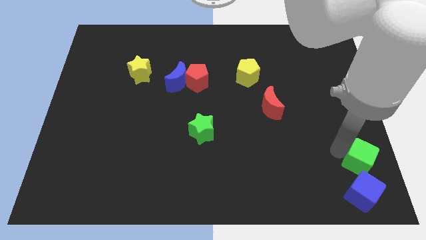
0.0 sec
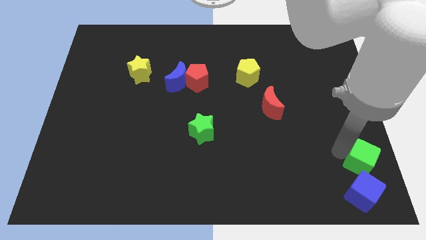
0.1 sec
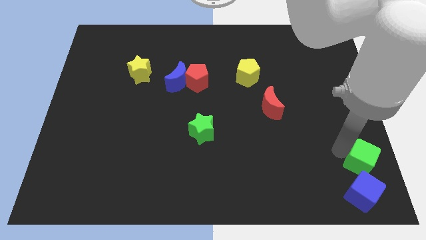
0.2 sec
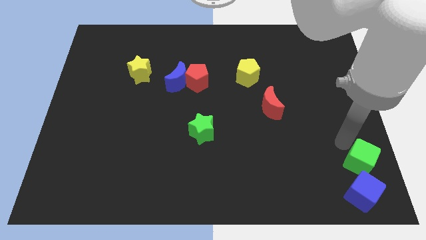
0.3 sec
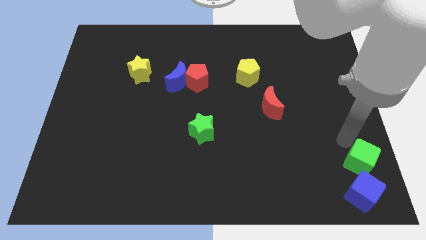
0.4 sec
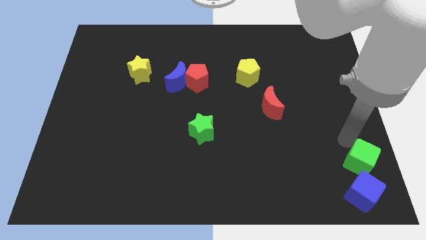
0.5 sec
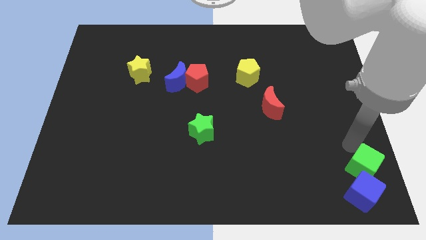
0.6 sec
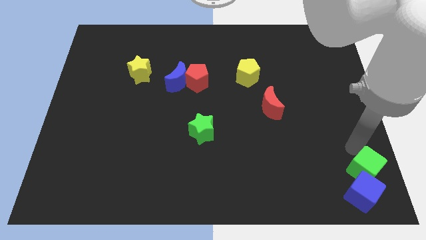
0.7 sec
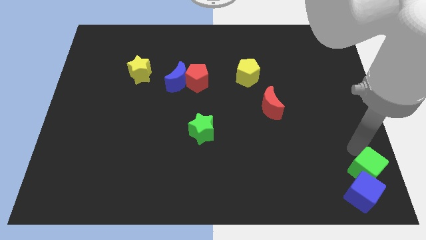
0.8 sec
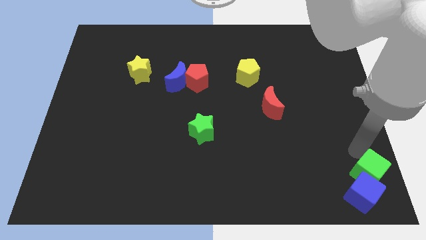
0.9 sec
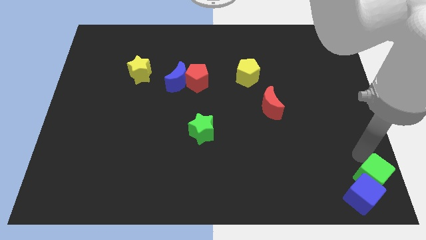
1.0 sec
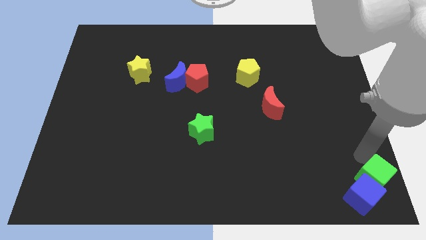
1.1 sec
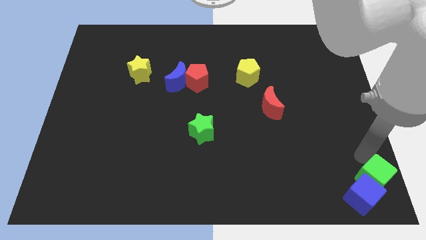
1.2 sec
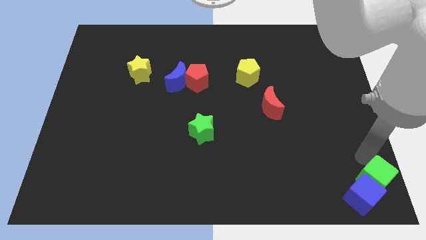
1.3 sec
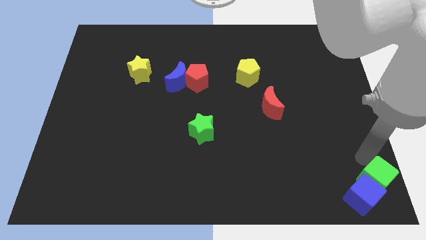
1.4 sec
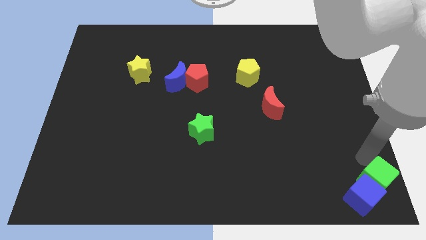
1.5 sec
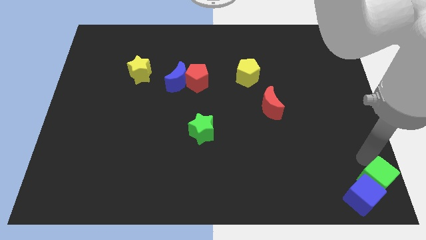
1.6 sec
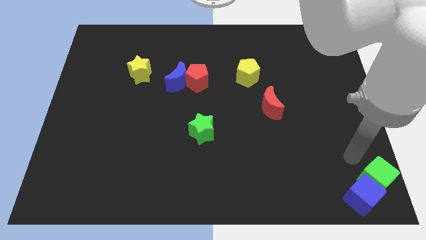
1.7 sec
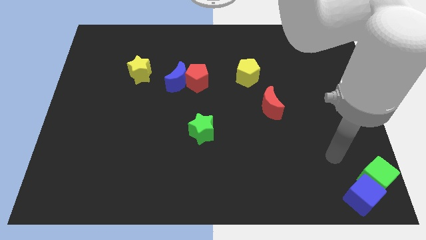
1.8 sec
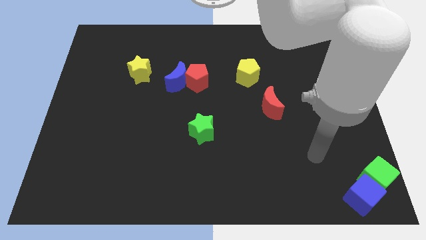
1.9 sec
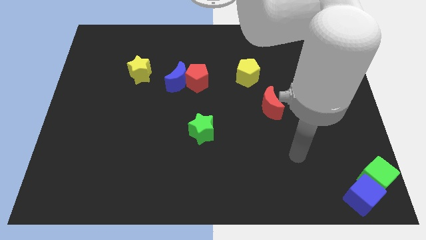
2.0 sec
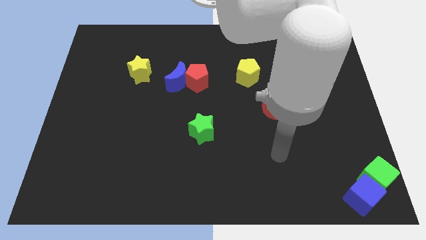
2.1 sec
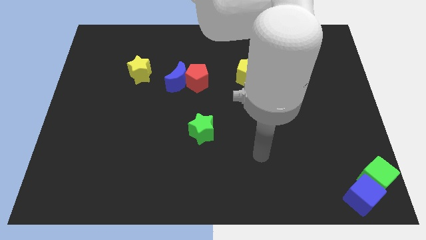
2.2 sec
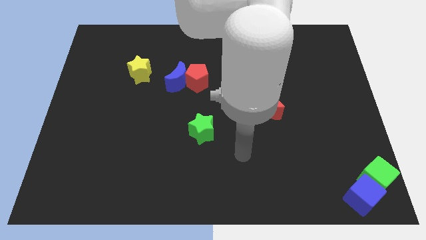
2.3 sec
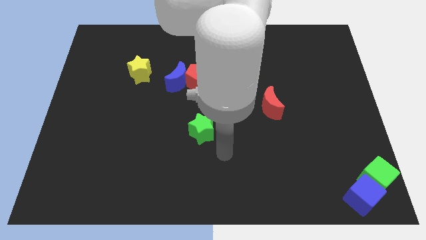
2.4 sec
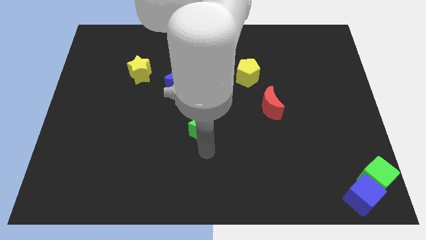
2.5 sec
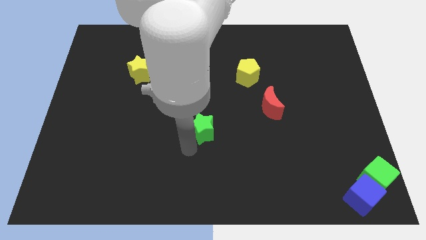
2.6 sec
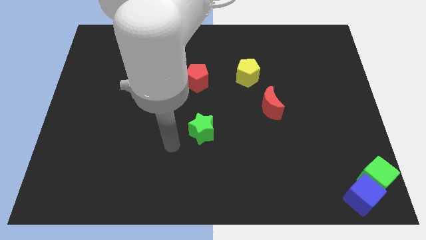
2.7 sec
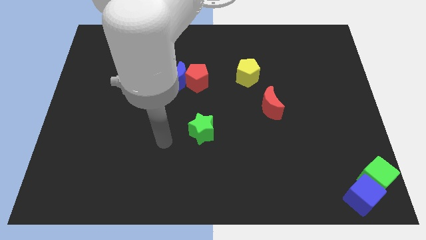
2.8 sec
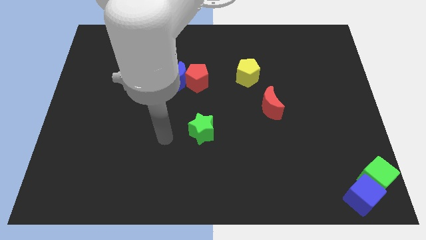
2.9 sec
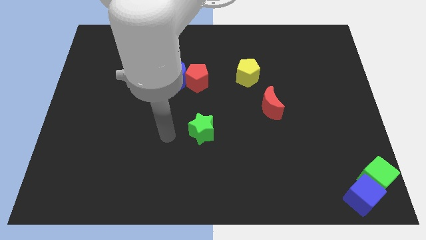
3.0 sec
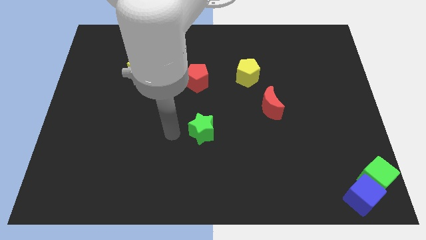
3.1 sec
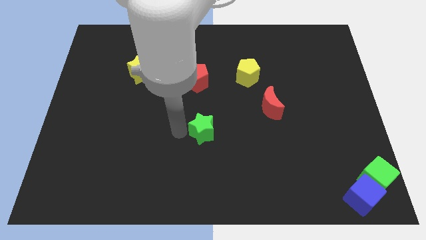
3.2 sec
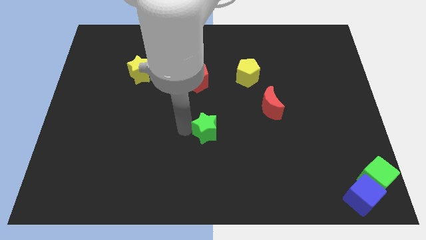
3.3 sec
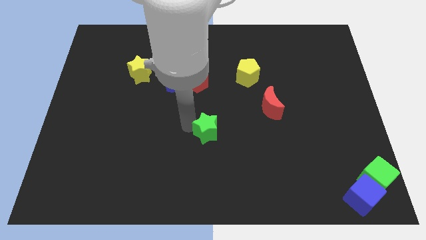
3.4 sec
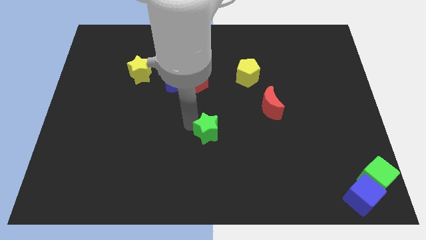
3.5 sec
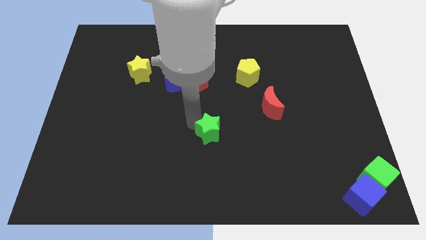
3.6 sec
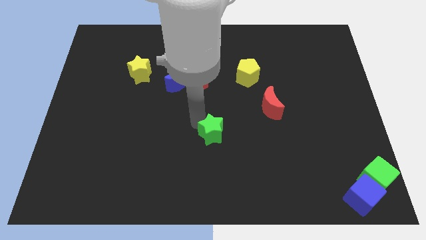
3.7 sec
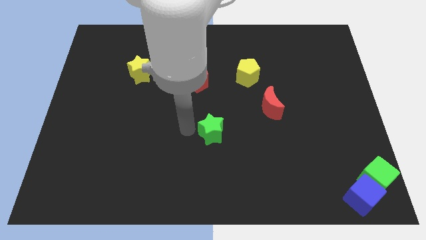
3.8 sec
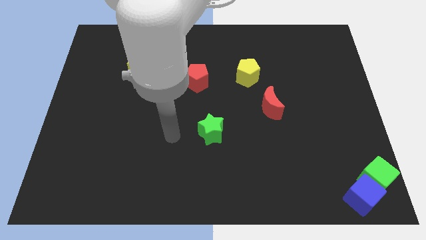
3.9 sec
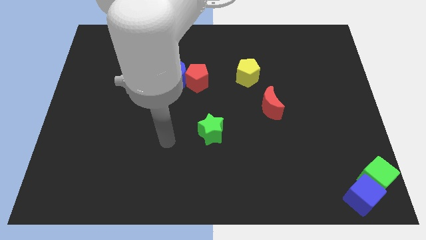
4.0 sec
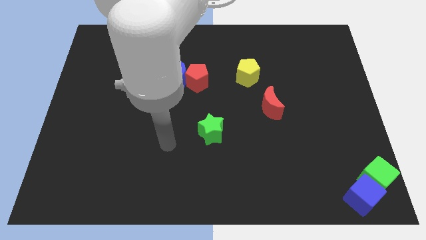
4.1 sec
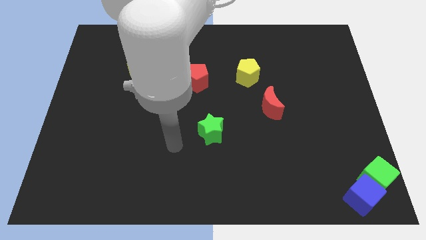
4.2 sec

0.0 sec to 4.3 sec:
slightly push the green star to the right

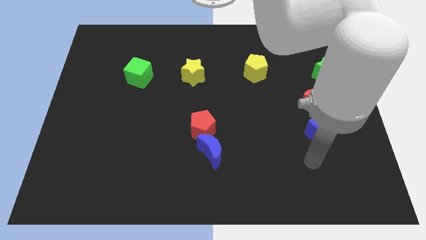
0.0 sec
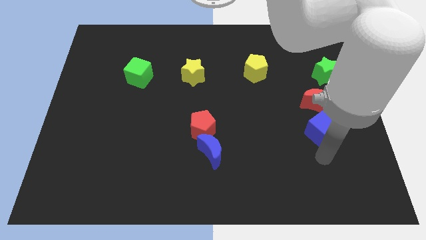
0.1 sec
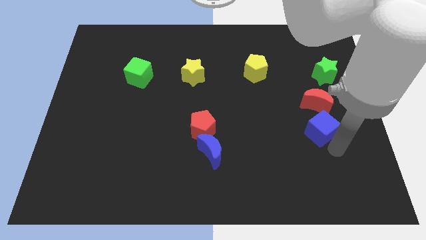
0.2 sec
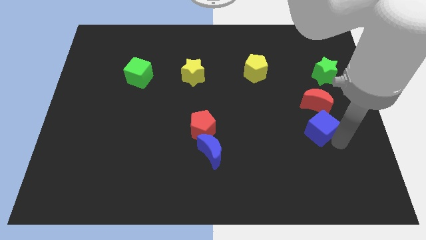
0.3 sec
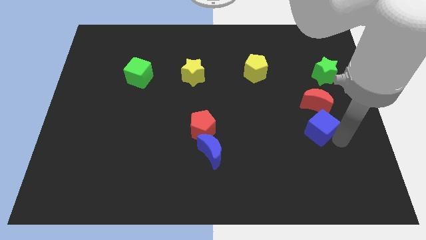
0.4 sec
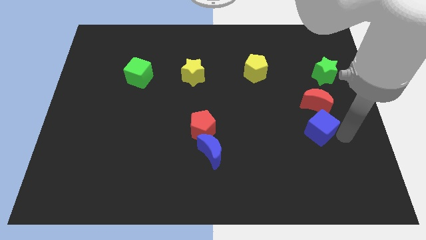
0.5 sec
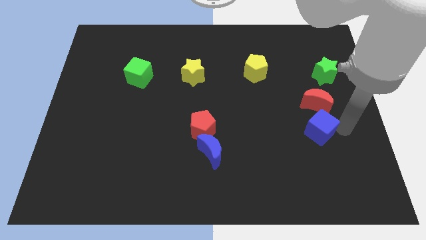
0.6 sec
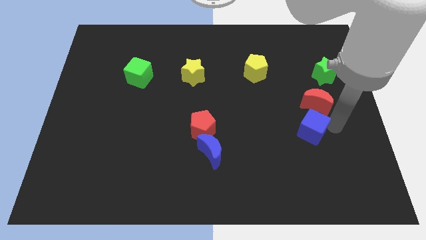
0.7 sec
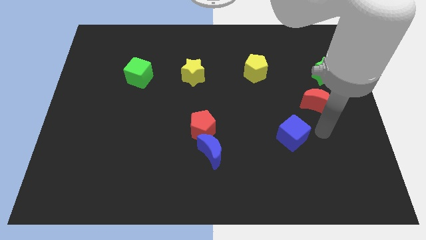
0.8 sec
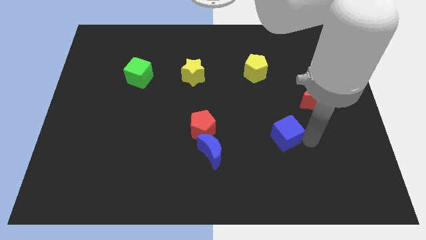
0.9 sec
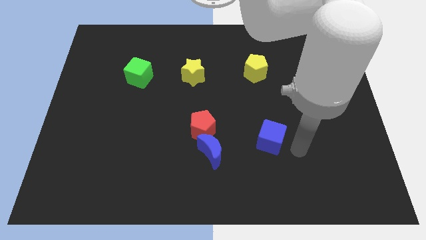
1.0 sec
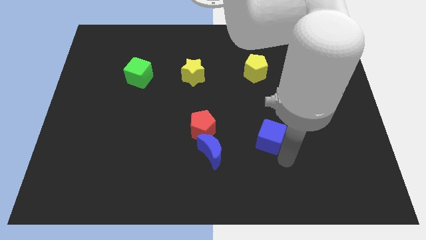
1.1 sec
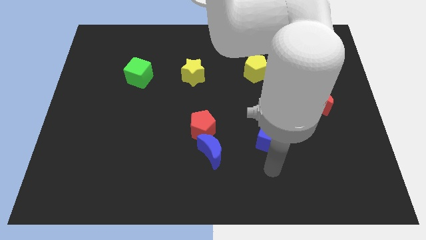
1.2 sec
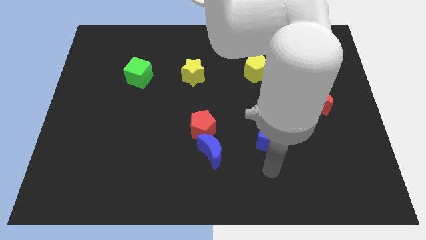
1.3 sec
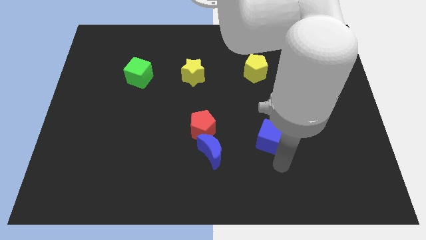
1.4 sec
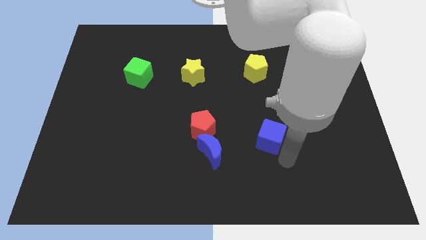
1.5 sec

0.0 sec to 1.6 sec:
push the blue cube between blue moon and red moon

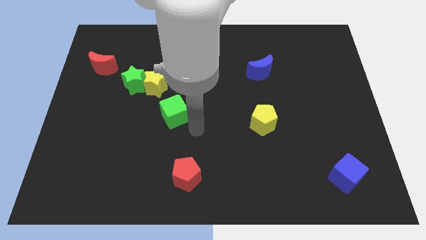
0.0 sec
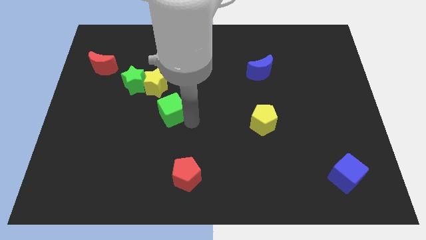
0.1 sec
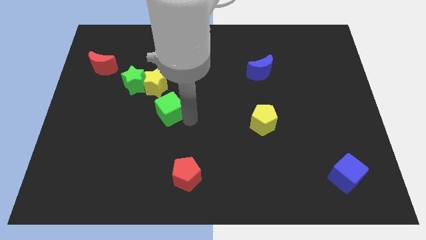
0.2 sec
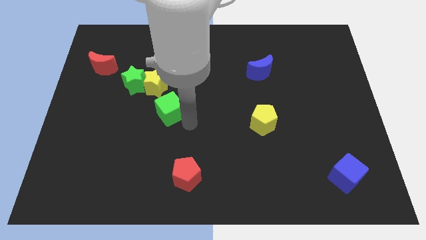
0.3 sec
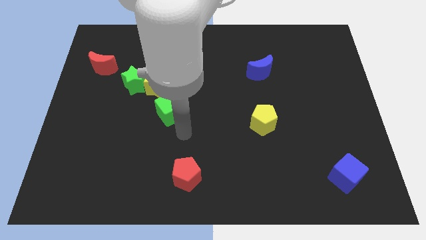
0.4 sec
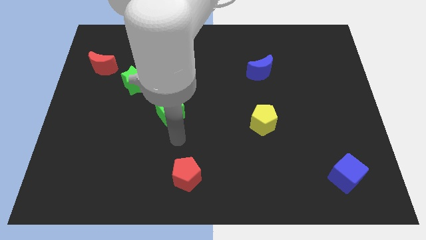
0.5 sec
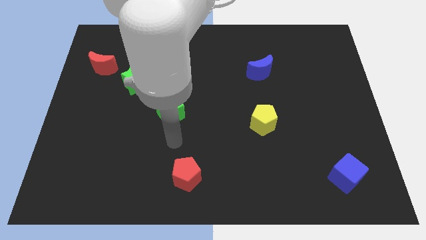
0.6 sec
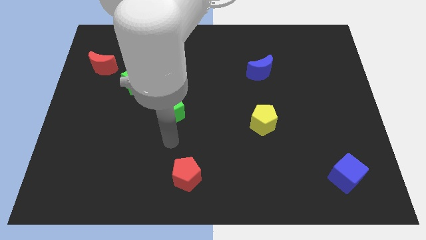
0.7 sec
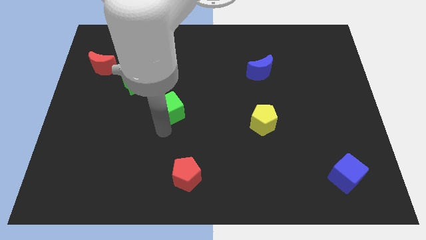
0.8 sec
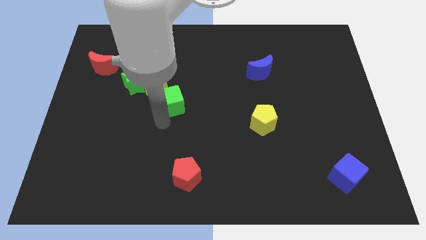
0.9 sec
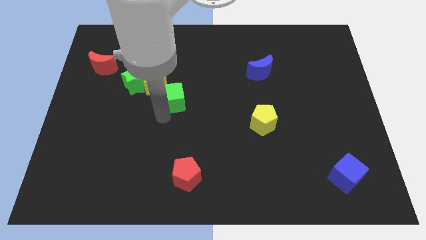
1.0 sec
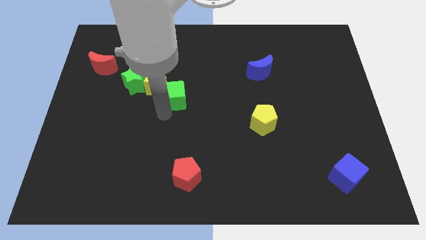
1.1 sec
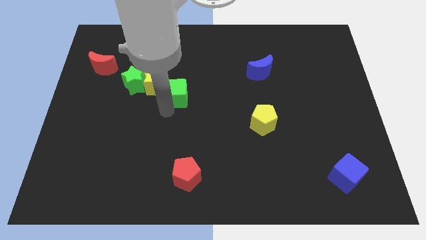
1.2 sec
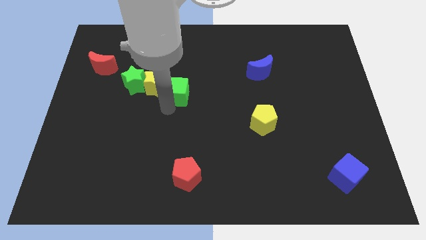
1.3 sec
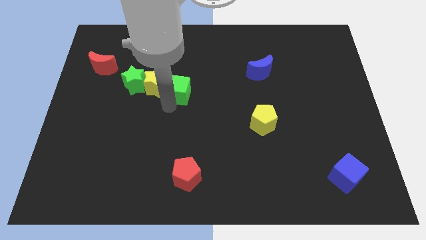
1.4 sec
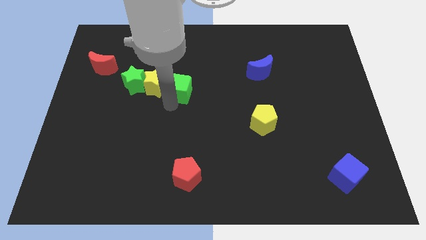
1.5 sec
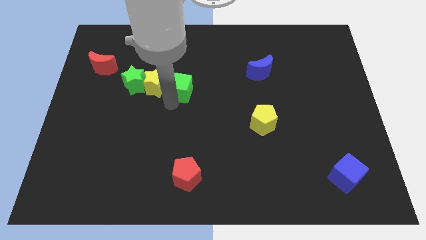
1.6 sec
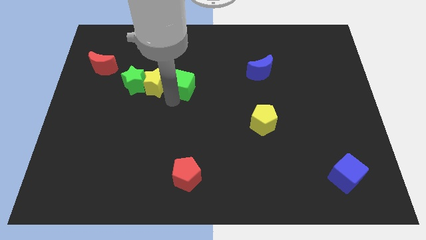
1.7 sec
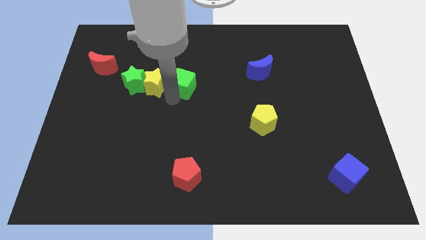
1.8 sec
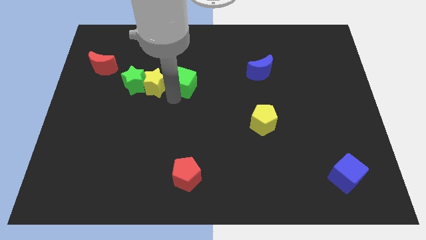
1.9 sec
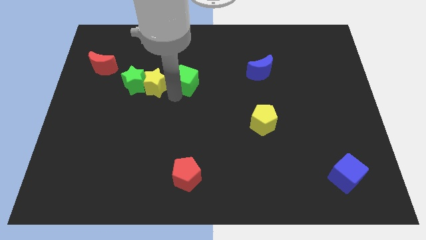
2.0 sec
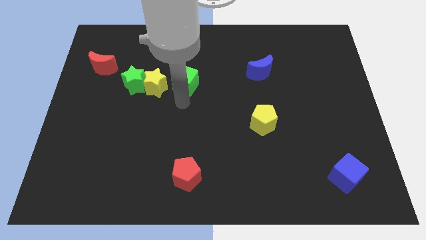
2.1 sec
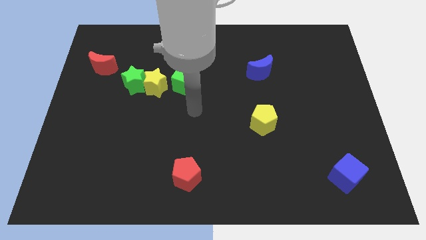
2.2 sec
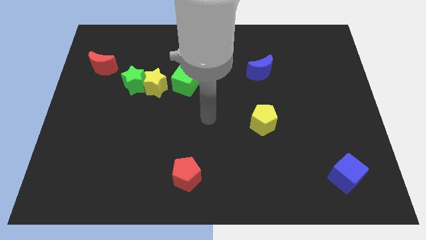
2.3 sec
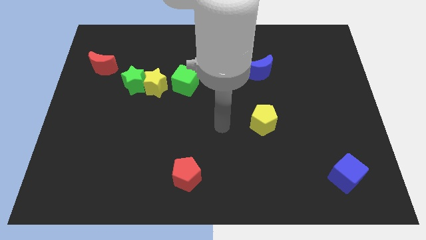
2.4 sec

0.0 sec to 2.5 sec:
place green cube on right side of yellow star

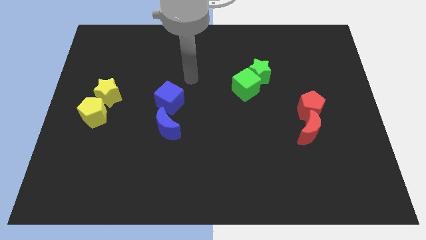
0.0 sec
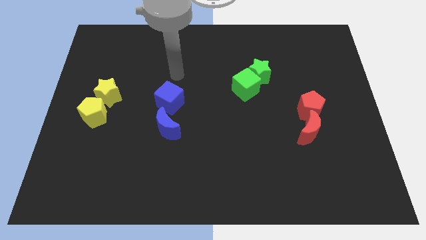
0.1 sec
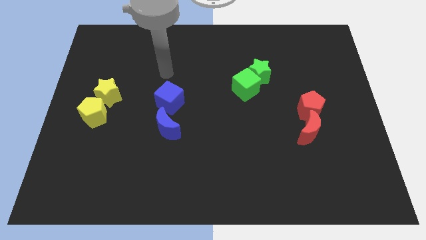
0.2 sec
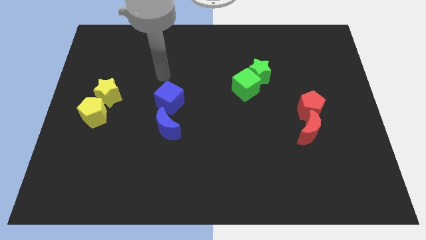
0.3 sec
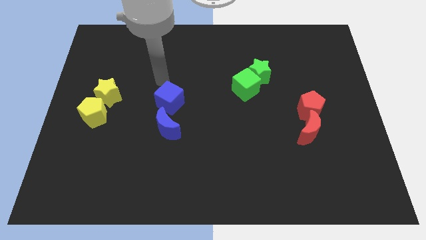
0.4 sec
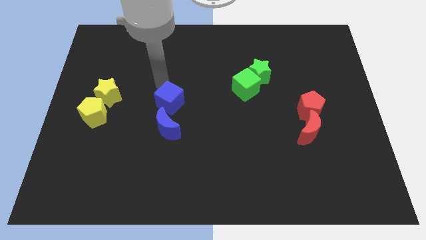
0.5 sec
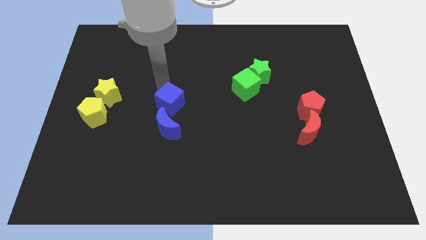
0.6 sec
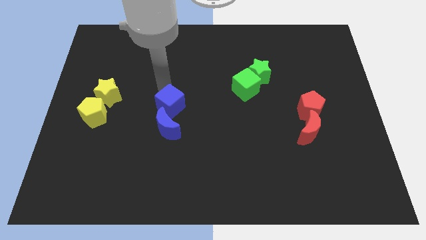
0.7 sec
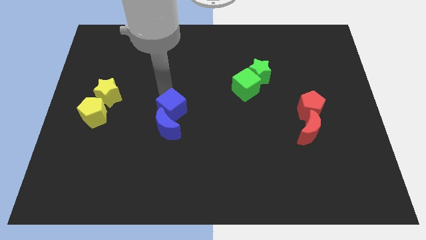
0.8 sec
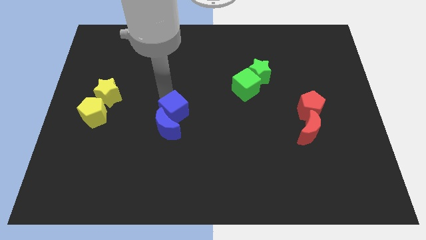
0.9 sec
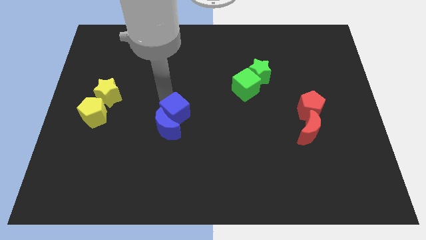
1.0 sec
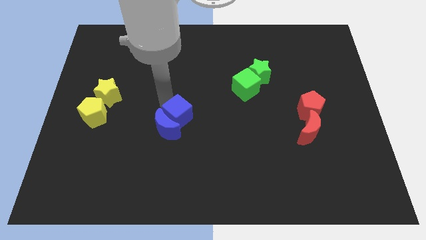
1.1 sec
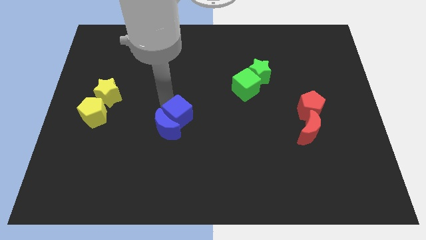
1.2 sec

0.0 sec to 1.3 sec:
move blue cube close to blue moon
